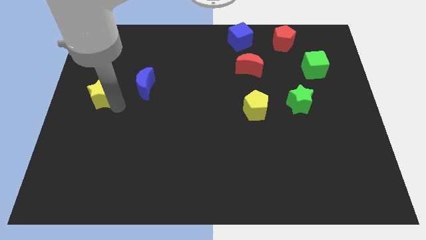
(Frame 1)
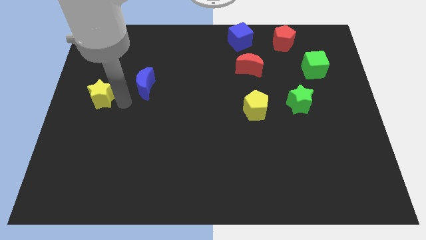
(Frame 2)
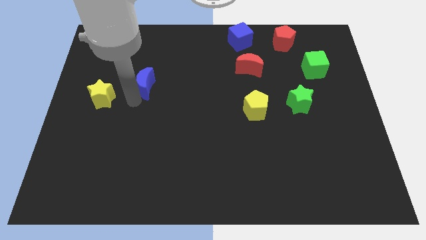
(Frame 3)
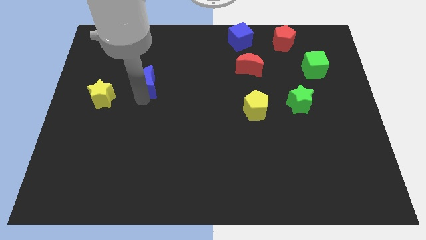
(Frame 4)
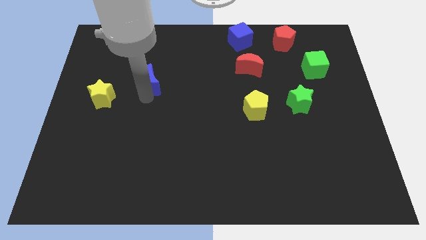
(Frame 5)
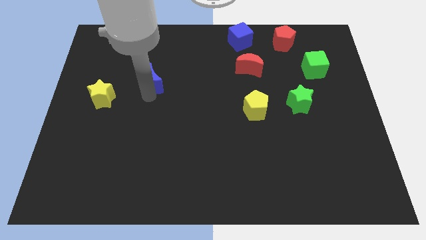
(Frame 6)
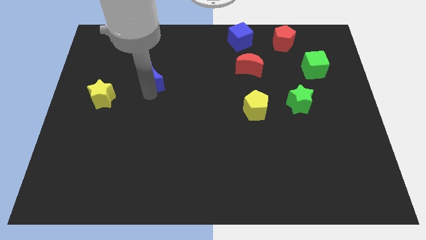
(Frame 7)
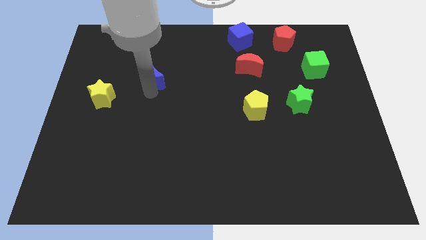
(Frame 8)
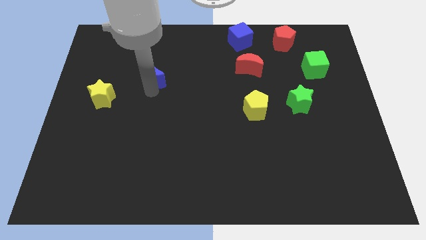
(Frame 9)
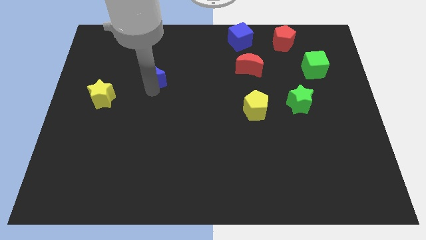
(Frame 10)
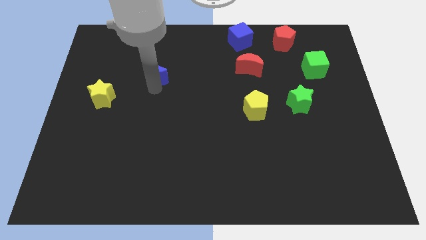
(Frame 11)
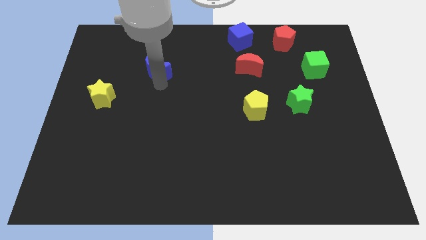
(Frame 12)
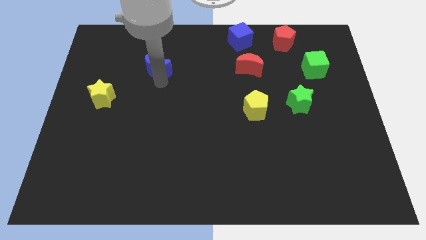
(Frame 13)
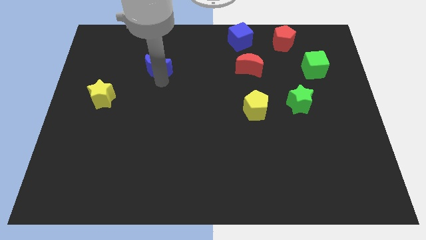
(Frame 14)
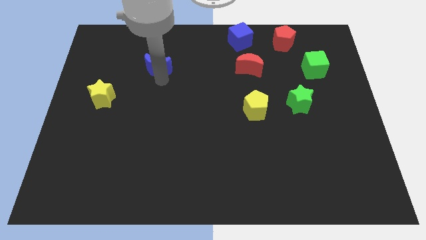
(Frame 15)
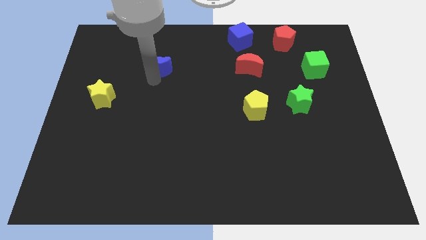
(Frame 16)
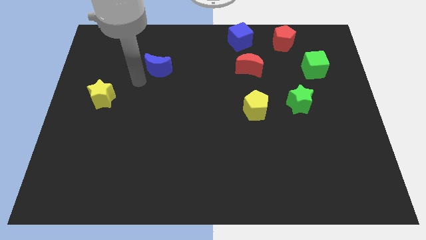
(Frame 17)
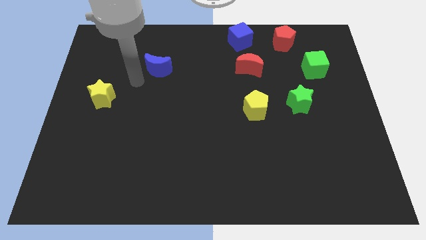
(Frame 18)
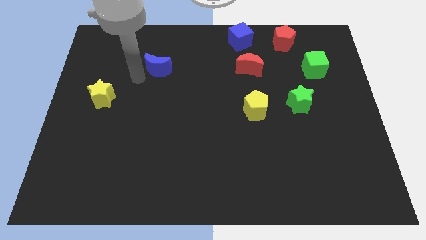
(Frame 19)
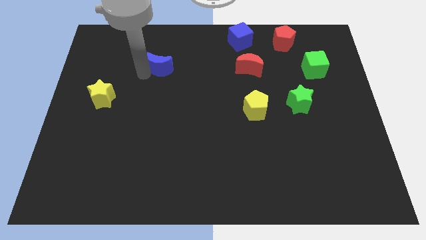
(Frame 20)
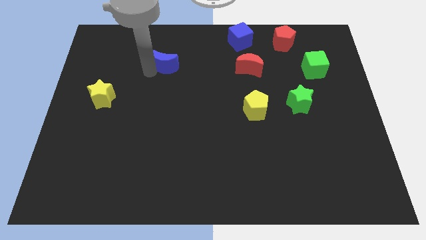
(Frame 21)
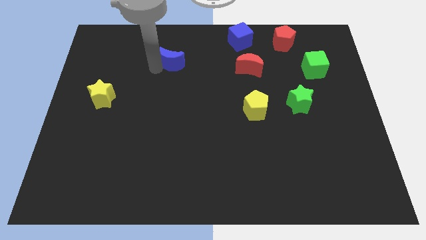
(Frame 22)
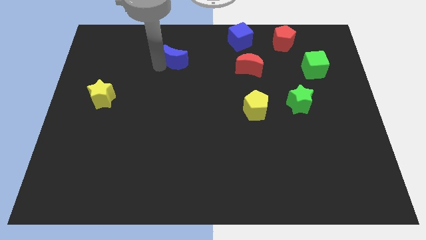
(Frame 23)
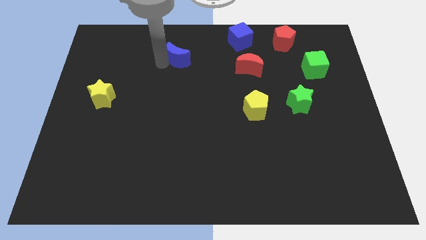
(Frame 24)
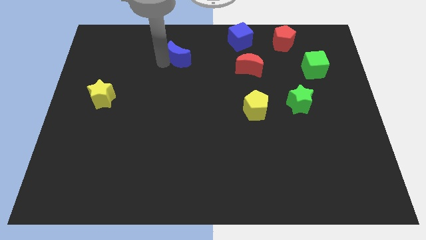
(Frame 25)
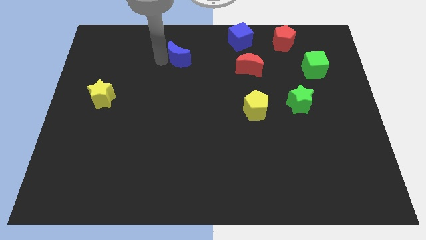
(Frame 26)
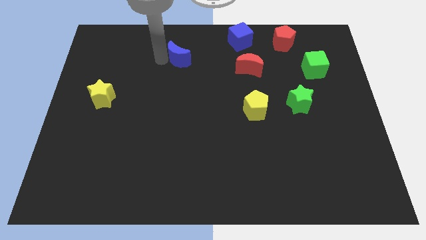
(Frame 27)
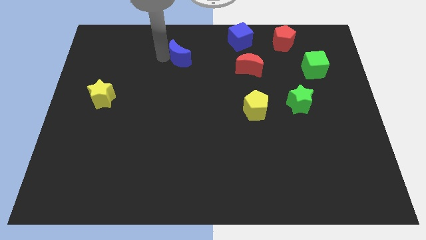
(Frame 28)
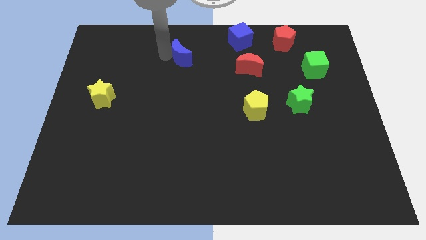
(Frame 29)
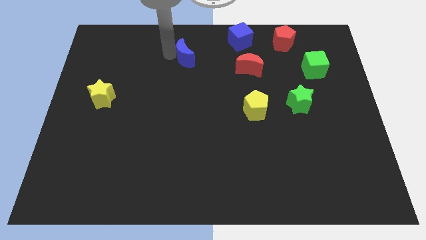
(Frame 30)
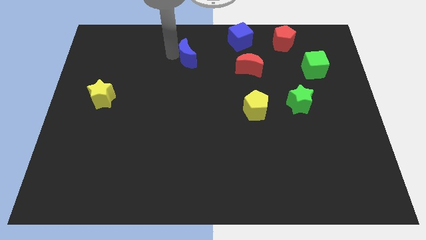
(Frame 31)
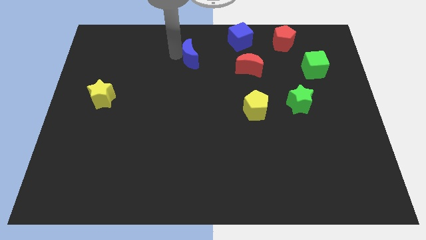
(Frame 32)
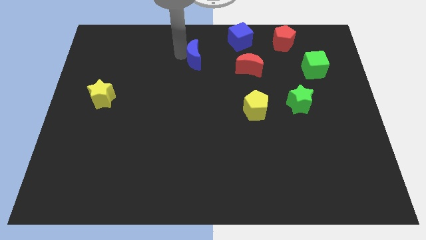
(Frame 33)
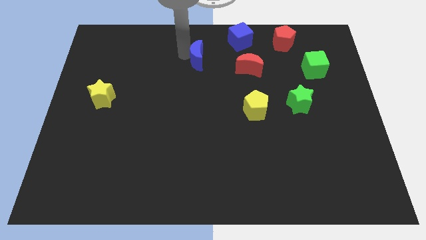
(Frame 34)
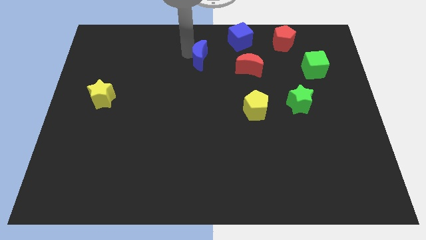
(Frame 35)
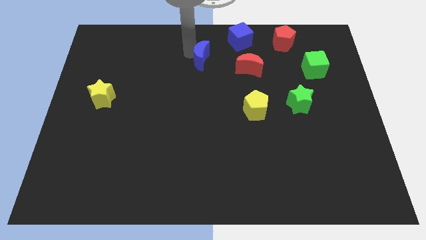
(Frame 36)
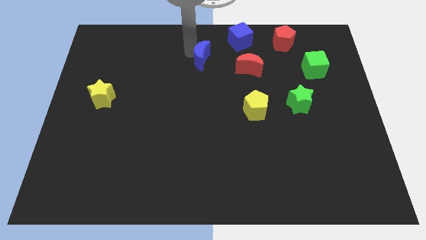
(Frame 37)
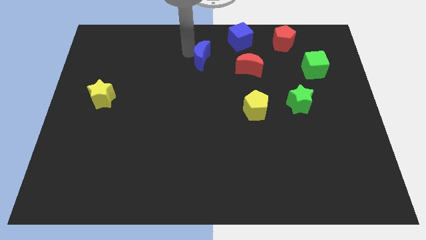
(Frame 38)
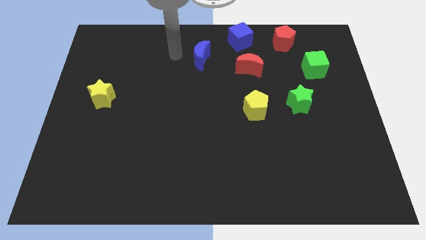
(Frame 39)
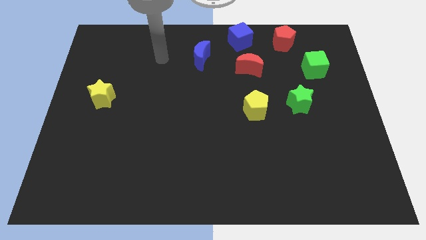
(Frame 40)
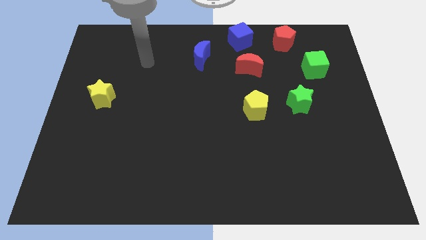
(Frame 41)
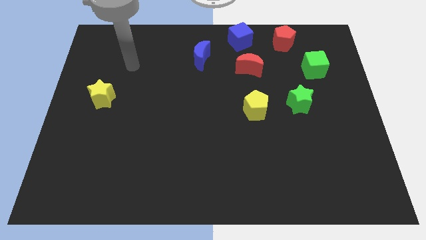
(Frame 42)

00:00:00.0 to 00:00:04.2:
push the blue moon to the left diagonal of the blue cube

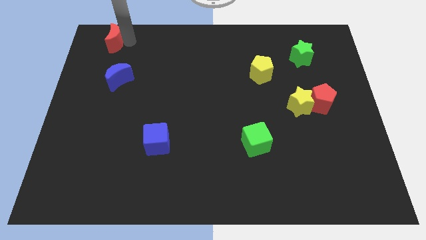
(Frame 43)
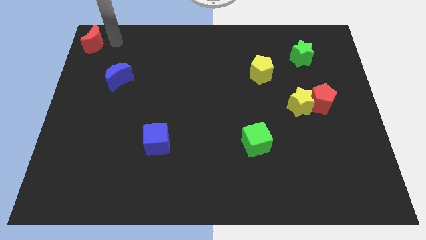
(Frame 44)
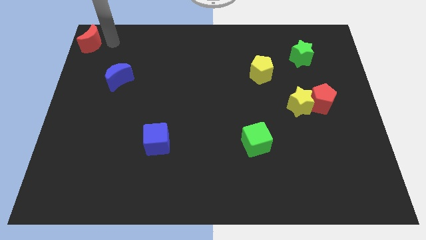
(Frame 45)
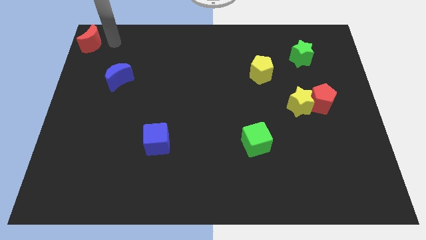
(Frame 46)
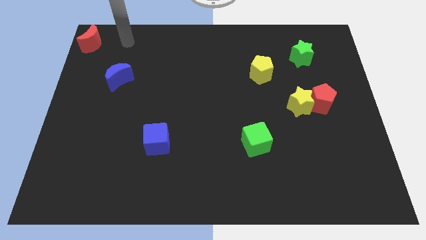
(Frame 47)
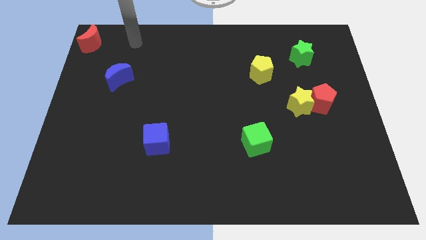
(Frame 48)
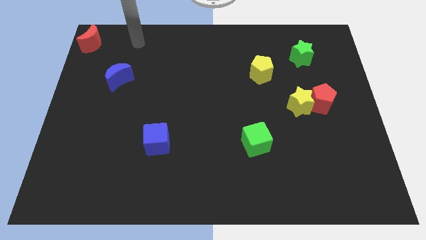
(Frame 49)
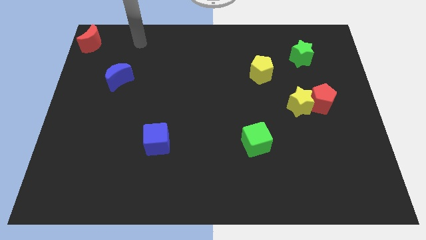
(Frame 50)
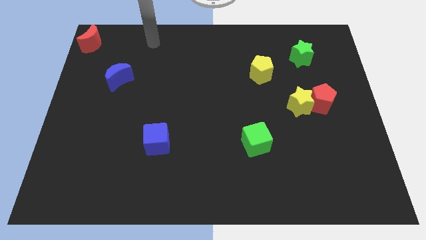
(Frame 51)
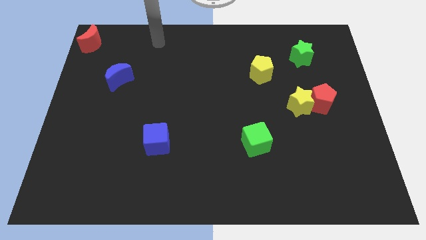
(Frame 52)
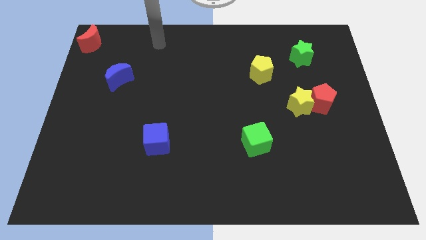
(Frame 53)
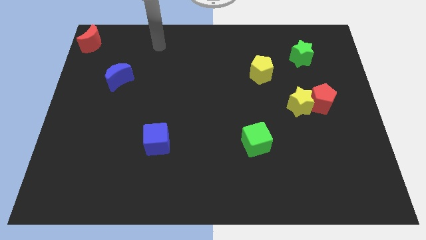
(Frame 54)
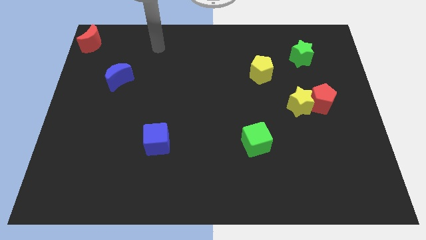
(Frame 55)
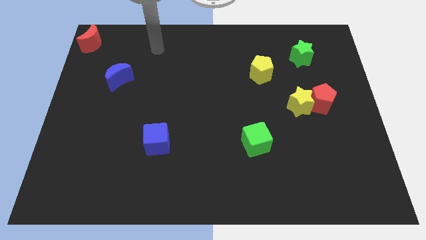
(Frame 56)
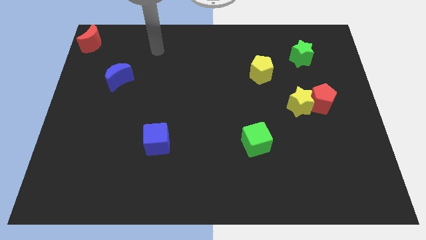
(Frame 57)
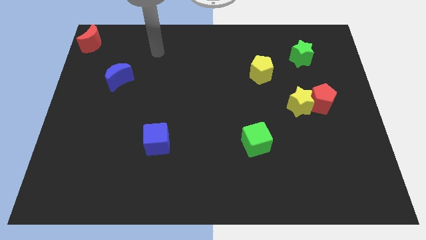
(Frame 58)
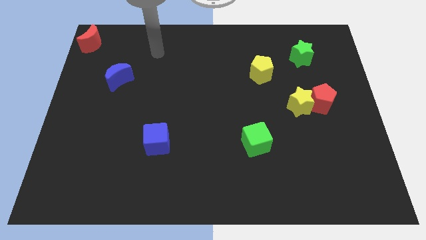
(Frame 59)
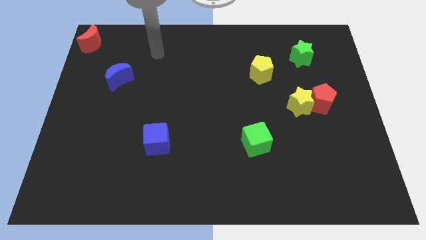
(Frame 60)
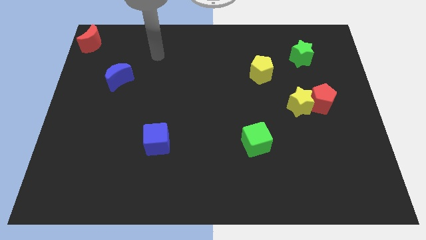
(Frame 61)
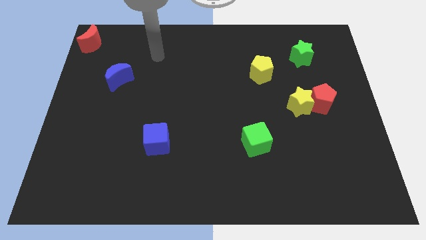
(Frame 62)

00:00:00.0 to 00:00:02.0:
push the red moon to the top left corner of the board

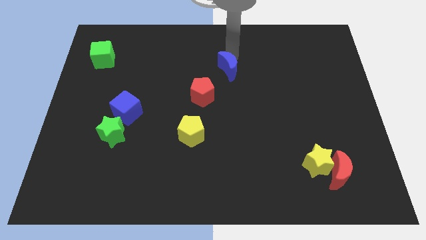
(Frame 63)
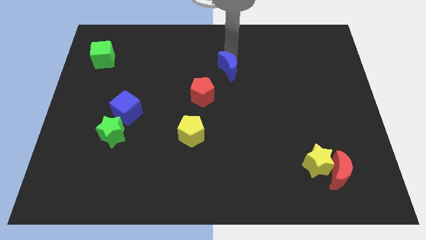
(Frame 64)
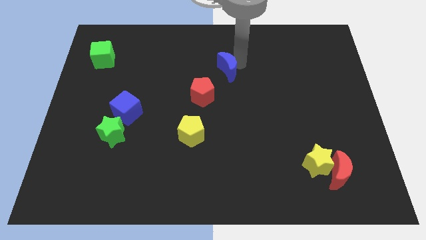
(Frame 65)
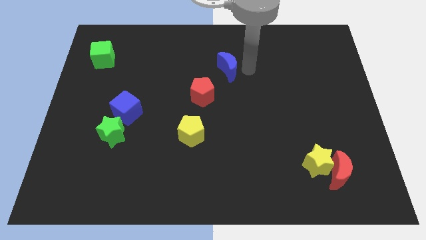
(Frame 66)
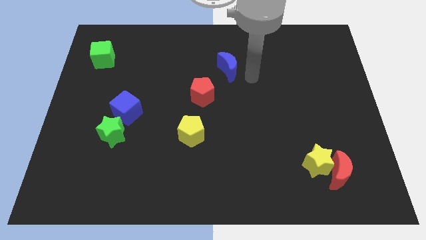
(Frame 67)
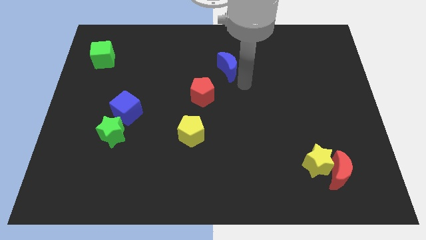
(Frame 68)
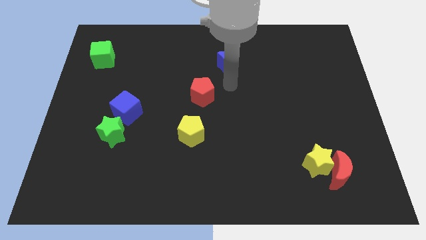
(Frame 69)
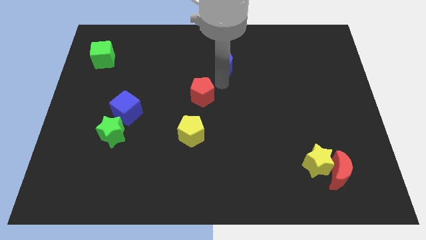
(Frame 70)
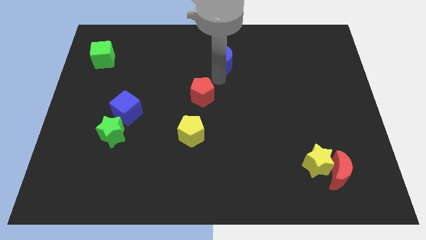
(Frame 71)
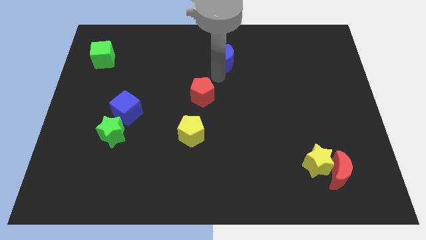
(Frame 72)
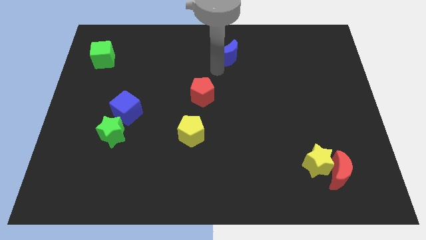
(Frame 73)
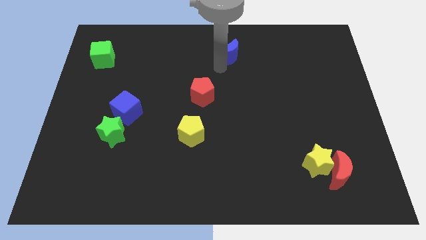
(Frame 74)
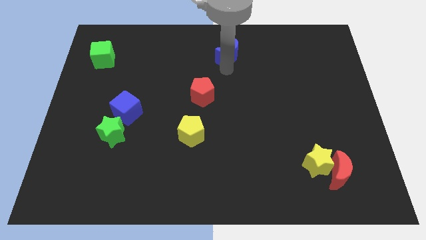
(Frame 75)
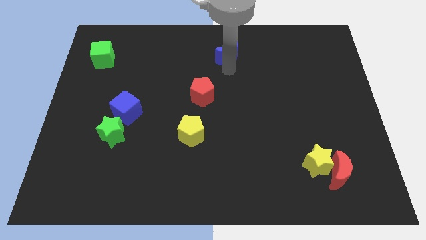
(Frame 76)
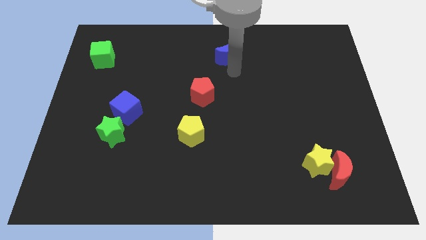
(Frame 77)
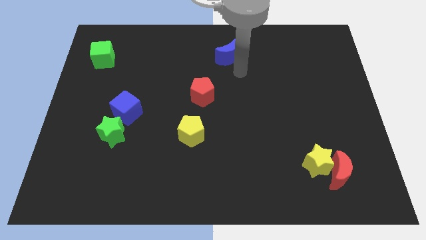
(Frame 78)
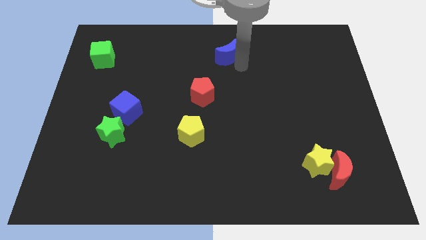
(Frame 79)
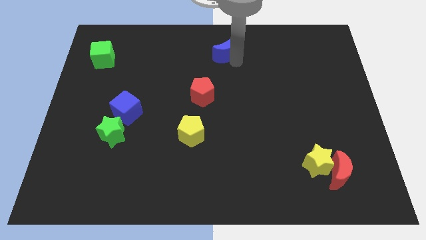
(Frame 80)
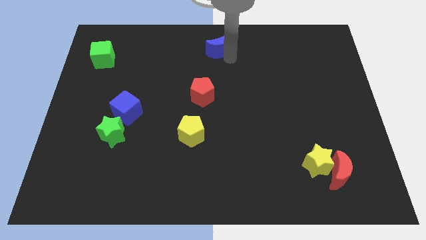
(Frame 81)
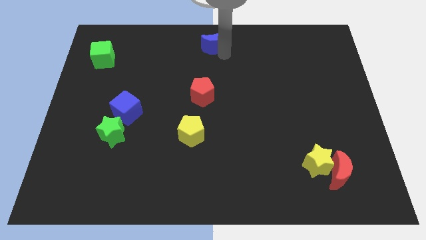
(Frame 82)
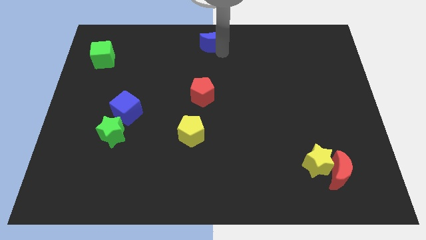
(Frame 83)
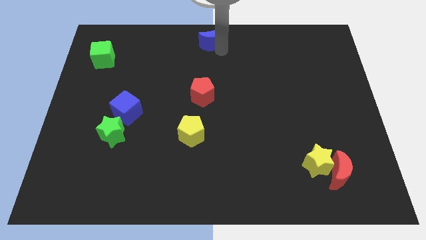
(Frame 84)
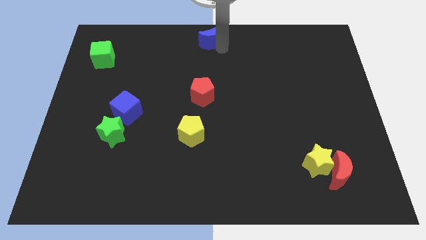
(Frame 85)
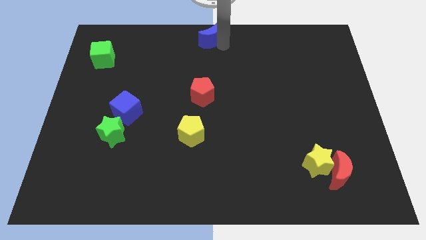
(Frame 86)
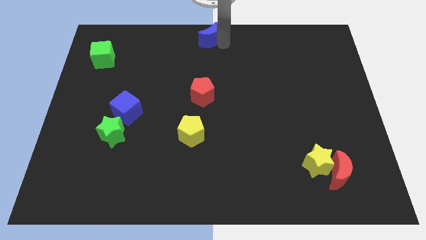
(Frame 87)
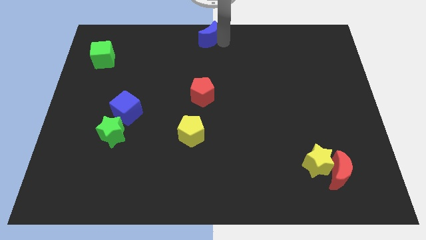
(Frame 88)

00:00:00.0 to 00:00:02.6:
move the blue crescent to the top center of the board

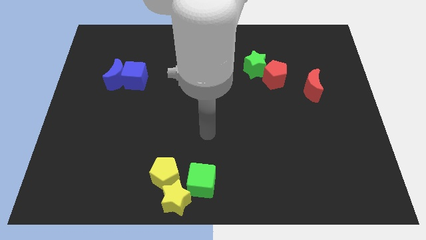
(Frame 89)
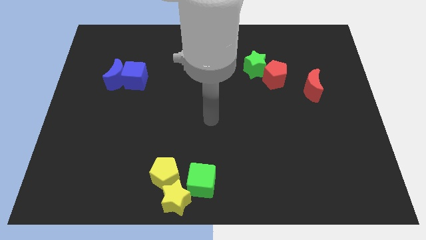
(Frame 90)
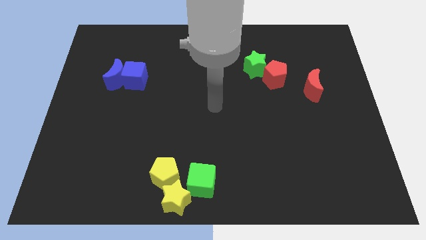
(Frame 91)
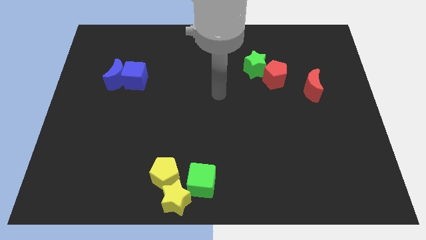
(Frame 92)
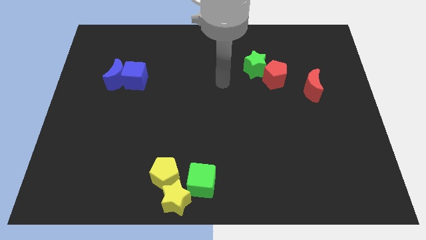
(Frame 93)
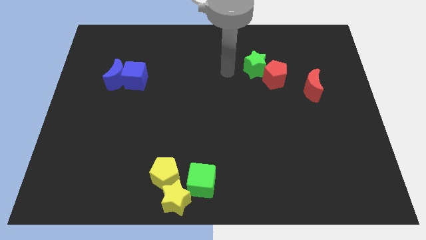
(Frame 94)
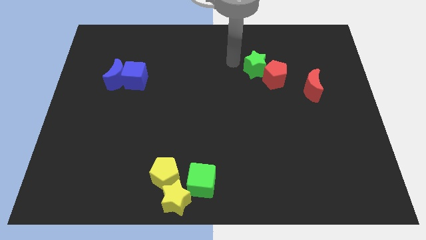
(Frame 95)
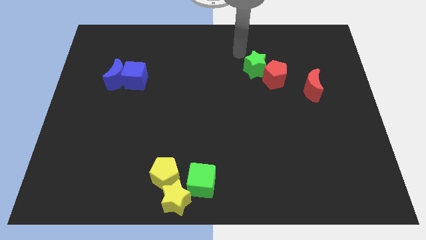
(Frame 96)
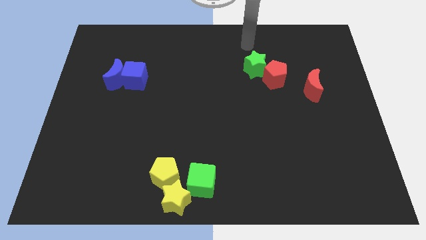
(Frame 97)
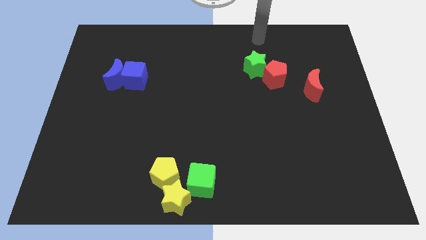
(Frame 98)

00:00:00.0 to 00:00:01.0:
place arm on the top of green star
